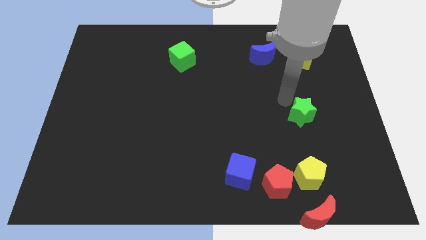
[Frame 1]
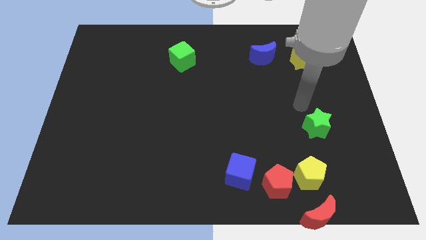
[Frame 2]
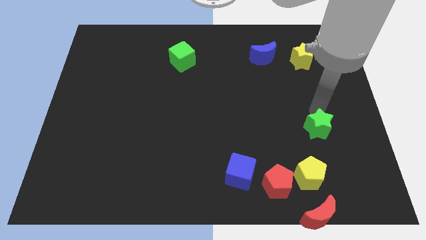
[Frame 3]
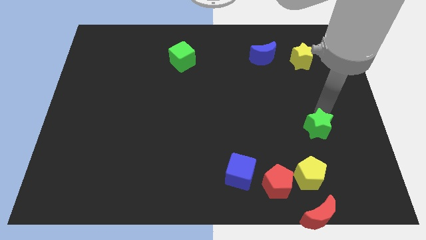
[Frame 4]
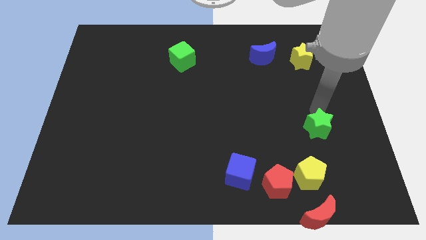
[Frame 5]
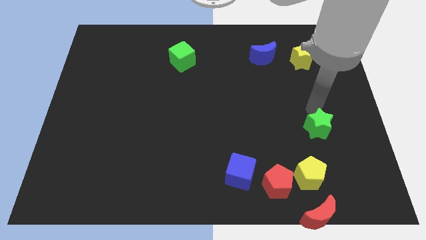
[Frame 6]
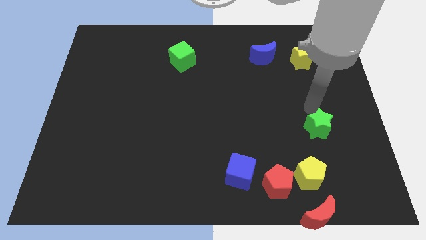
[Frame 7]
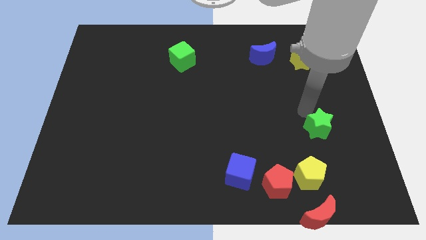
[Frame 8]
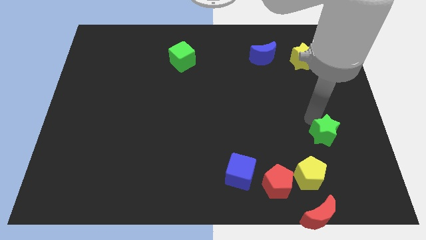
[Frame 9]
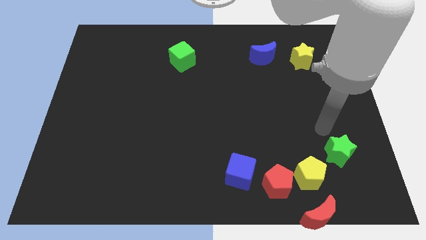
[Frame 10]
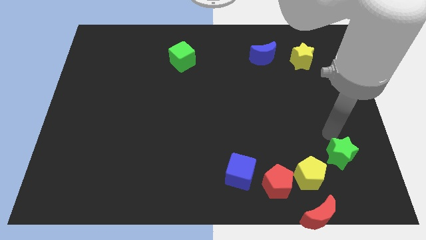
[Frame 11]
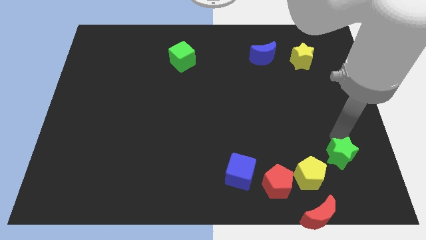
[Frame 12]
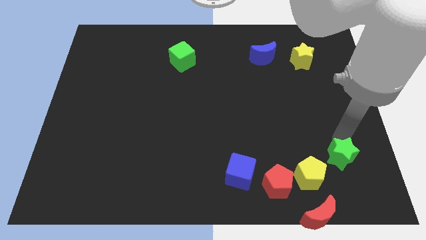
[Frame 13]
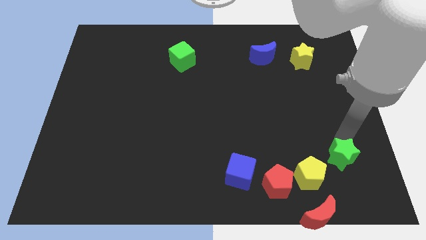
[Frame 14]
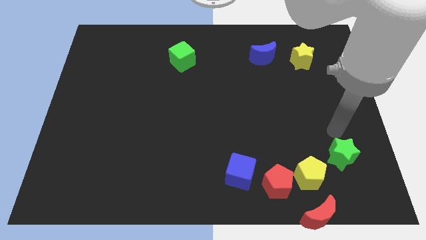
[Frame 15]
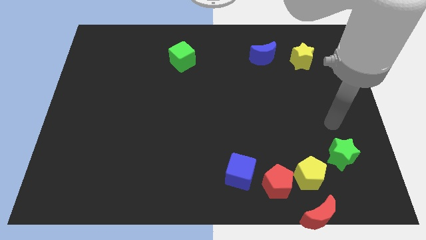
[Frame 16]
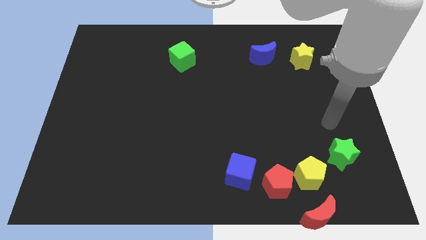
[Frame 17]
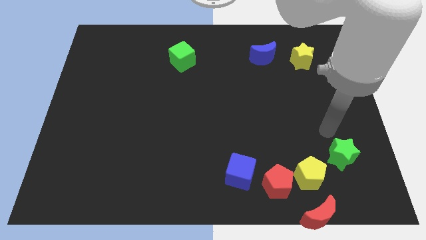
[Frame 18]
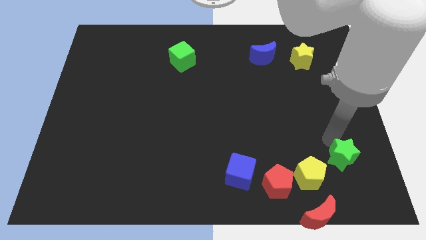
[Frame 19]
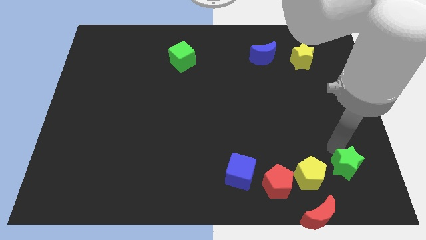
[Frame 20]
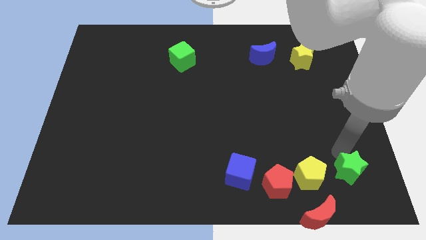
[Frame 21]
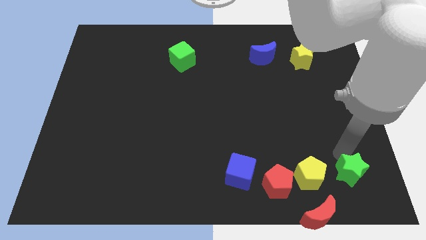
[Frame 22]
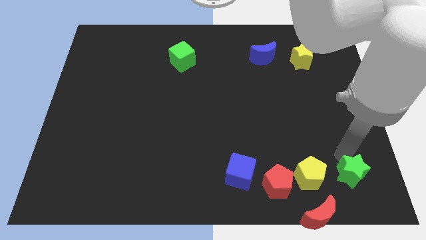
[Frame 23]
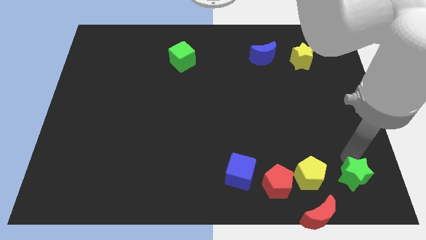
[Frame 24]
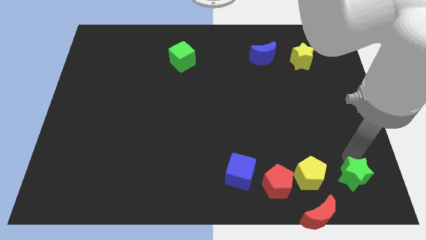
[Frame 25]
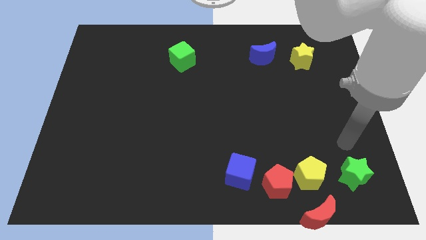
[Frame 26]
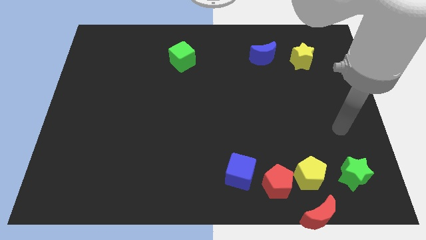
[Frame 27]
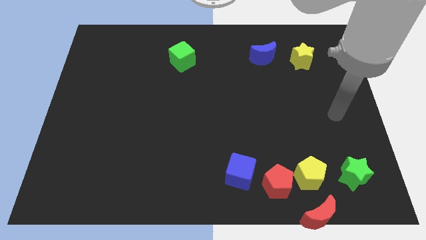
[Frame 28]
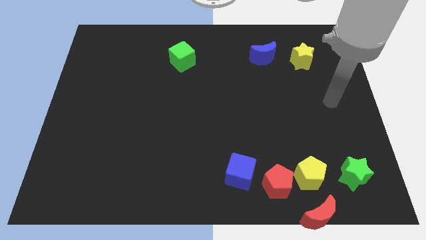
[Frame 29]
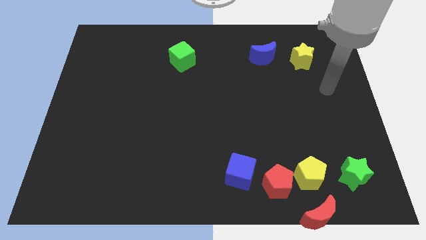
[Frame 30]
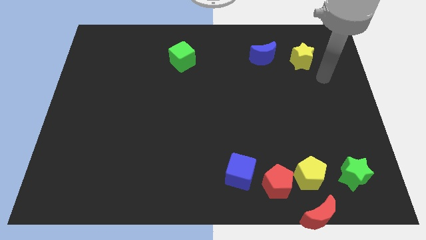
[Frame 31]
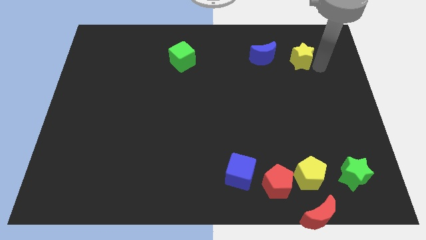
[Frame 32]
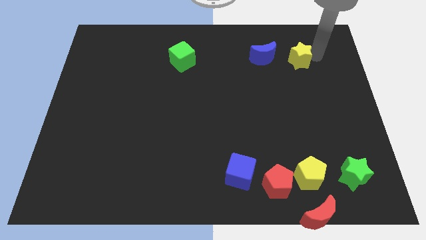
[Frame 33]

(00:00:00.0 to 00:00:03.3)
move the green star at the right side of the yellow pentagon

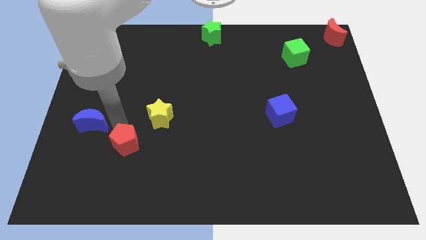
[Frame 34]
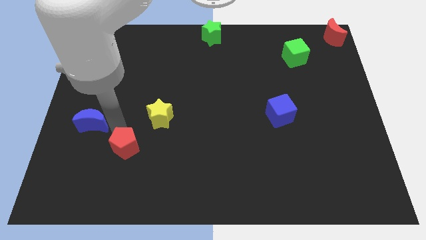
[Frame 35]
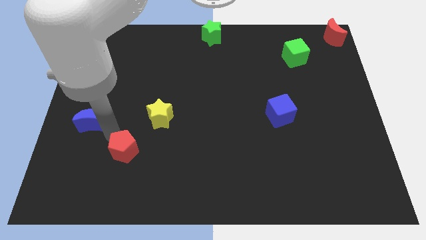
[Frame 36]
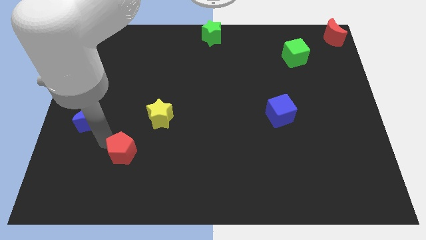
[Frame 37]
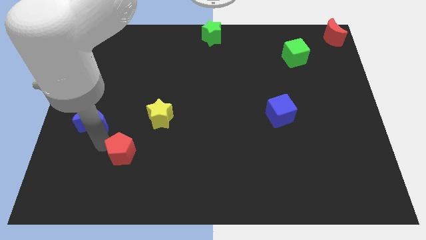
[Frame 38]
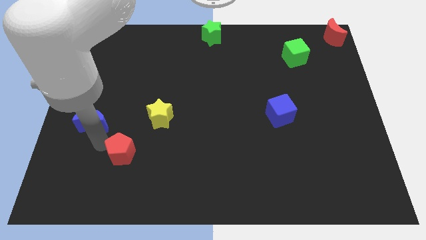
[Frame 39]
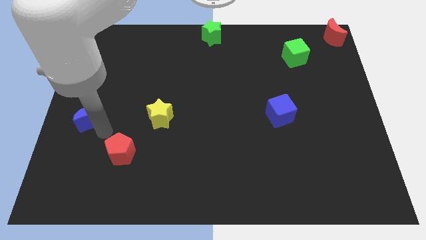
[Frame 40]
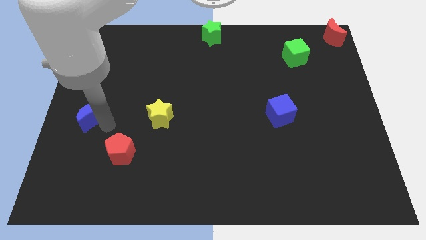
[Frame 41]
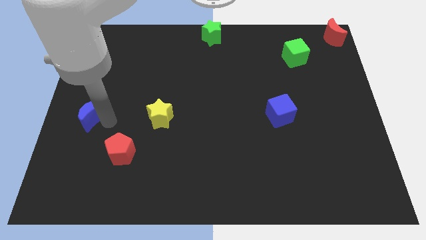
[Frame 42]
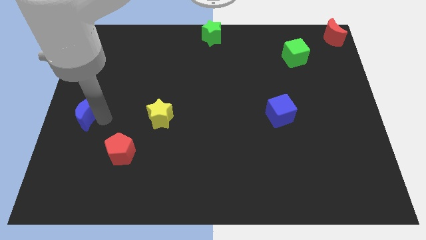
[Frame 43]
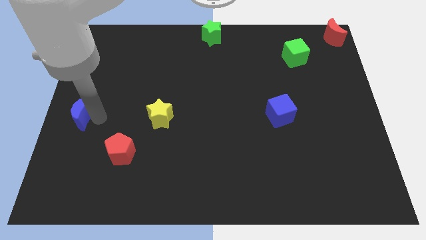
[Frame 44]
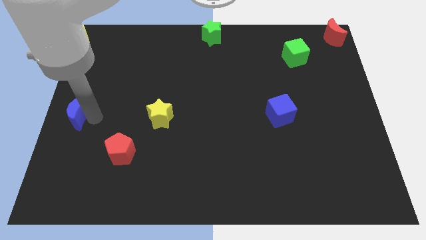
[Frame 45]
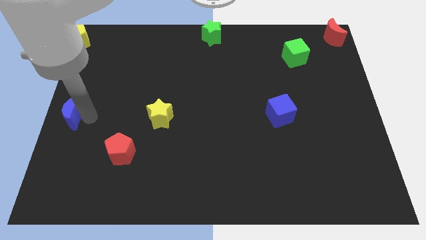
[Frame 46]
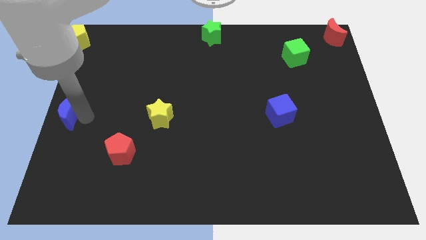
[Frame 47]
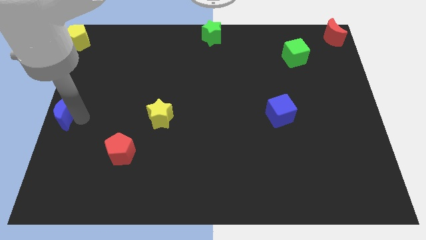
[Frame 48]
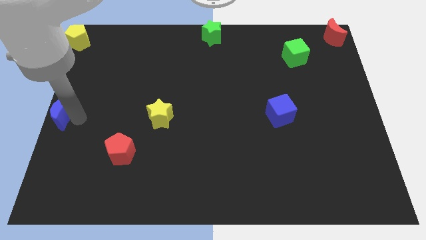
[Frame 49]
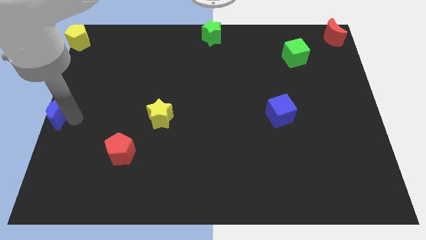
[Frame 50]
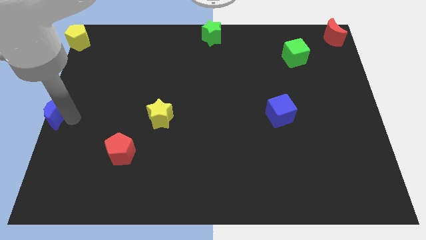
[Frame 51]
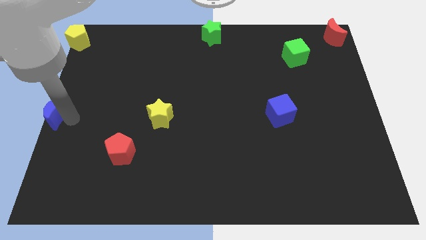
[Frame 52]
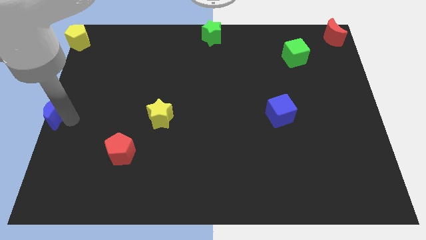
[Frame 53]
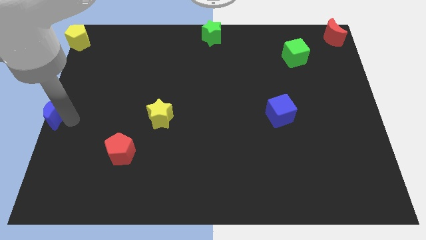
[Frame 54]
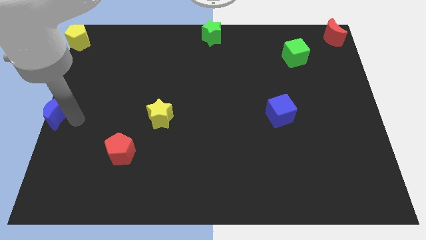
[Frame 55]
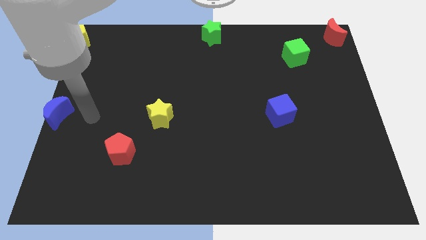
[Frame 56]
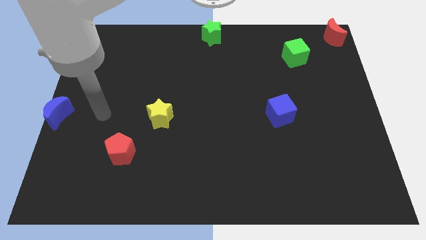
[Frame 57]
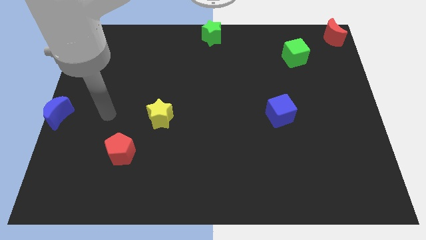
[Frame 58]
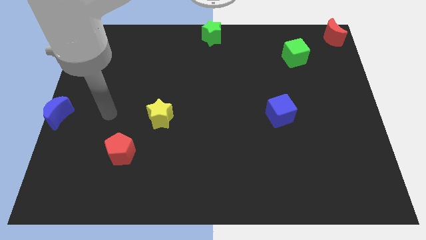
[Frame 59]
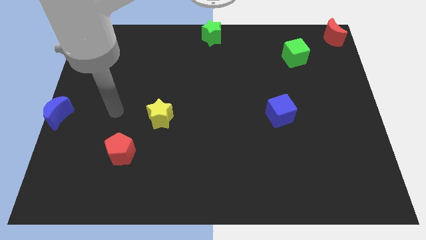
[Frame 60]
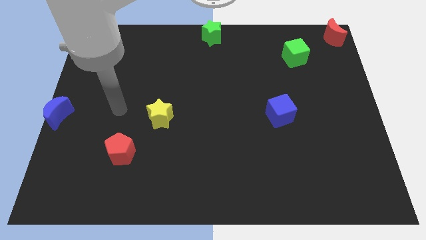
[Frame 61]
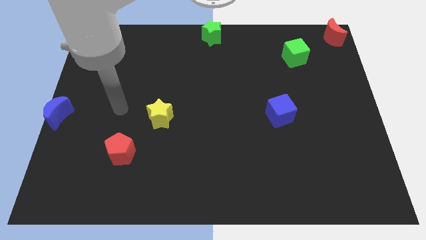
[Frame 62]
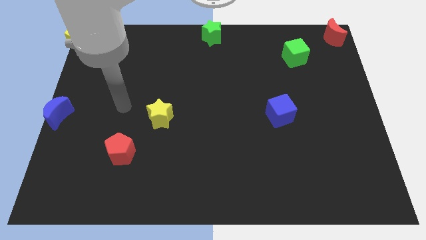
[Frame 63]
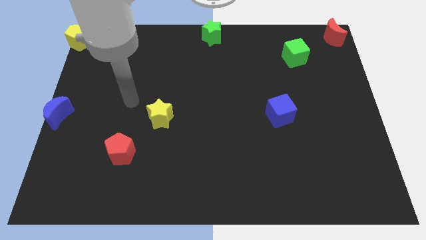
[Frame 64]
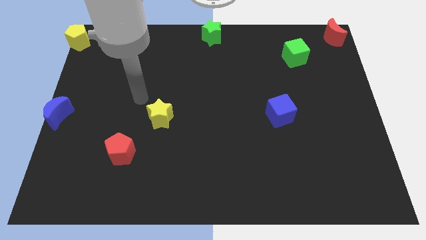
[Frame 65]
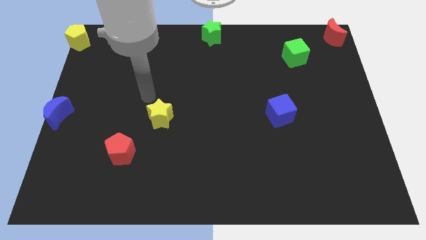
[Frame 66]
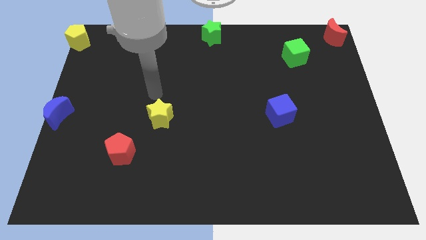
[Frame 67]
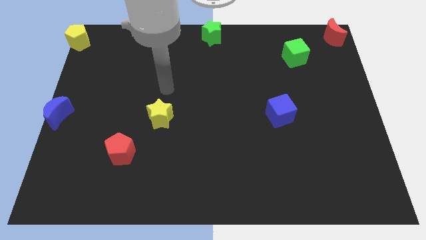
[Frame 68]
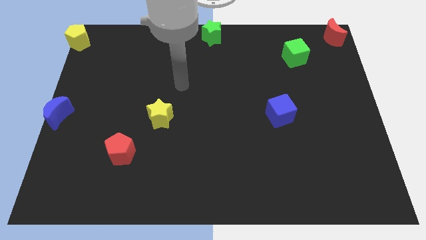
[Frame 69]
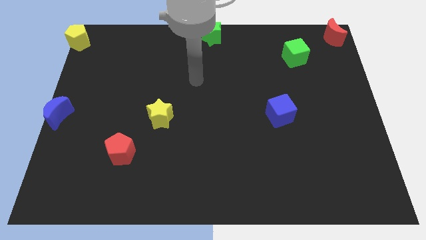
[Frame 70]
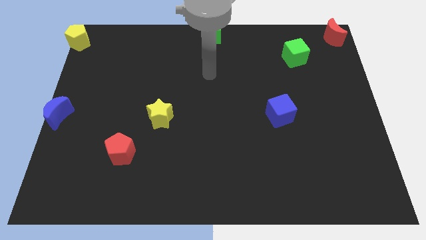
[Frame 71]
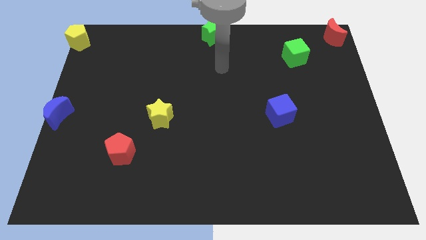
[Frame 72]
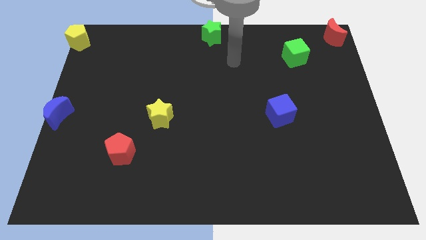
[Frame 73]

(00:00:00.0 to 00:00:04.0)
separate the blue crescent and the red pentagon

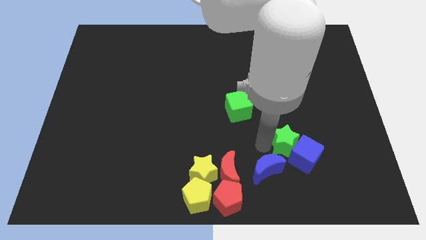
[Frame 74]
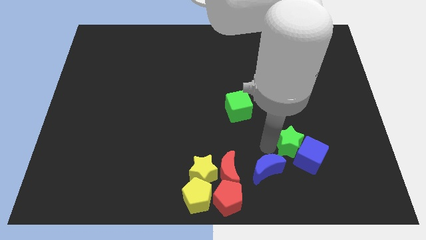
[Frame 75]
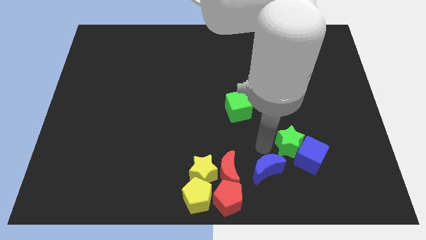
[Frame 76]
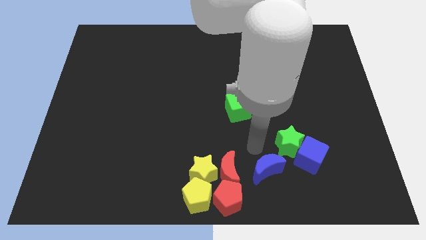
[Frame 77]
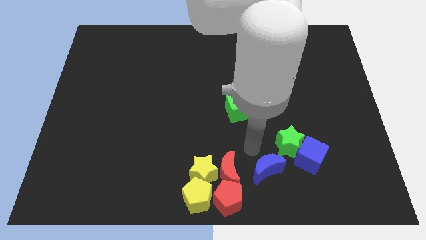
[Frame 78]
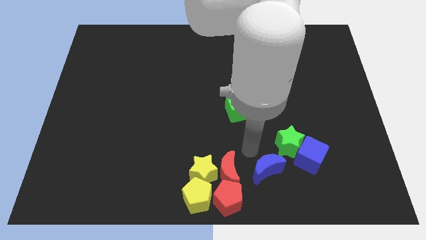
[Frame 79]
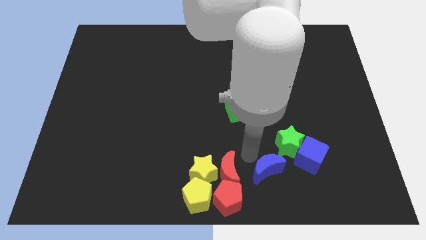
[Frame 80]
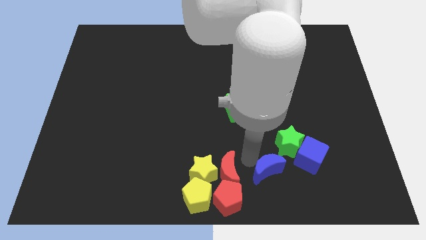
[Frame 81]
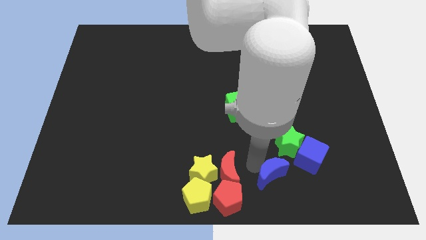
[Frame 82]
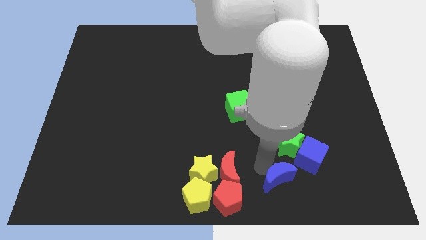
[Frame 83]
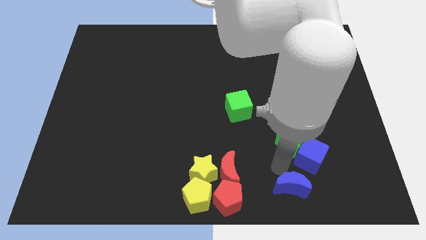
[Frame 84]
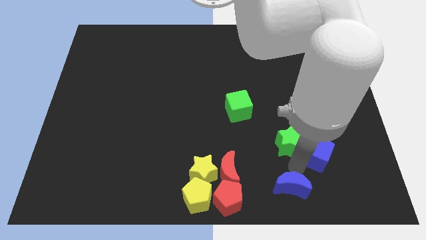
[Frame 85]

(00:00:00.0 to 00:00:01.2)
push the blue moon slightly down

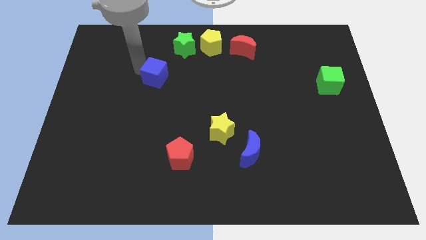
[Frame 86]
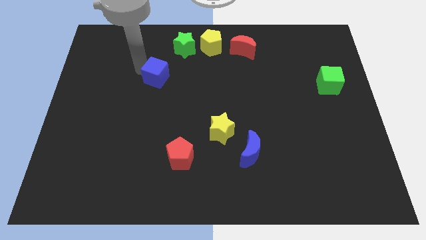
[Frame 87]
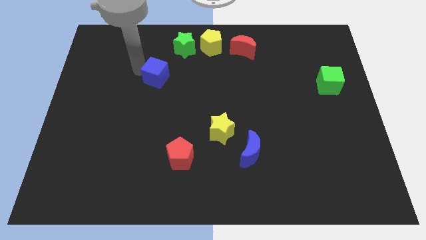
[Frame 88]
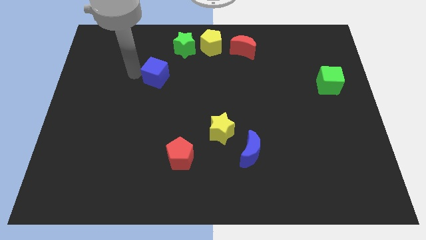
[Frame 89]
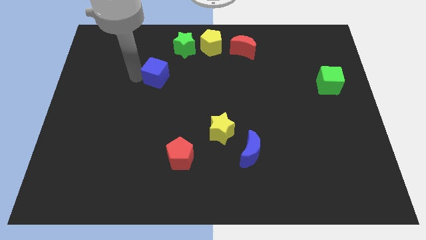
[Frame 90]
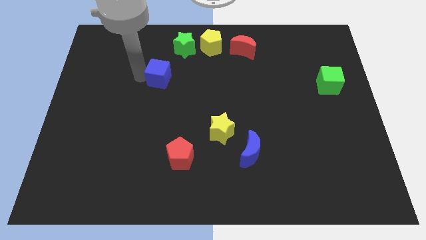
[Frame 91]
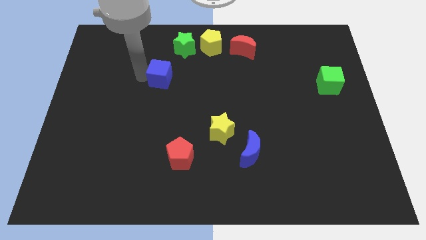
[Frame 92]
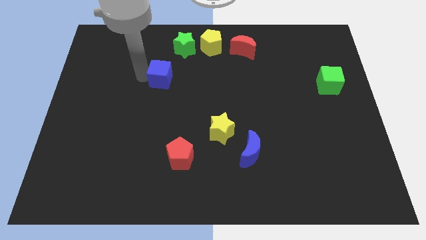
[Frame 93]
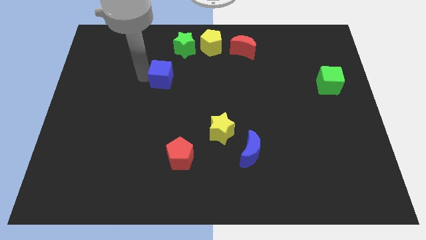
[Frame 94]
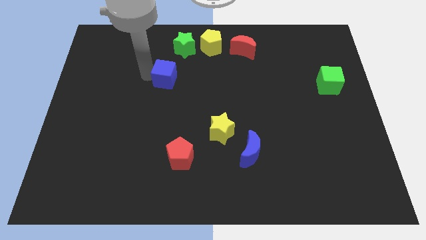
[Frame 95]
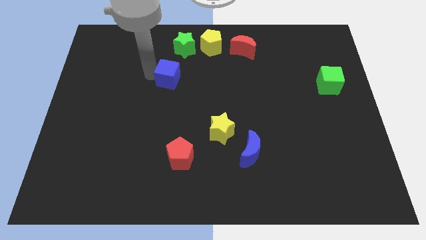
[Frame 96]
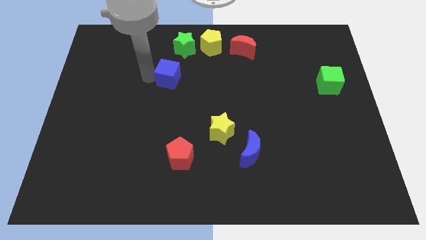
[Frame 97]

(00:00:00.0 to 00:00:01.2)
place blue cube to the bottom of green star
